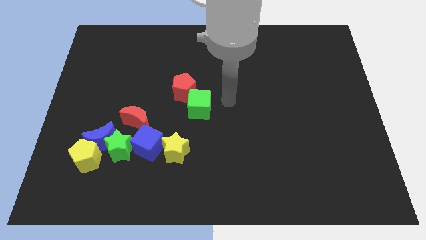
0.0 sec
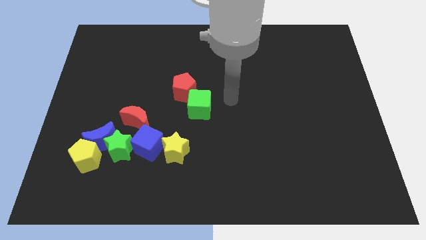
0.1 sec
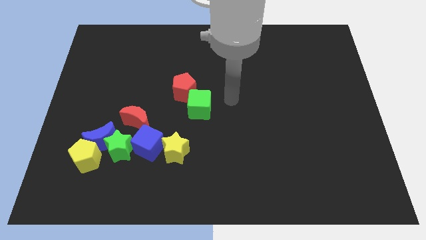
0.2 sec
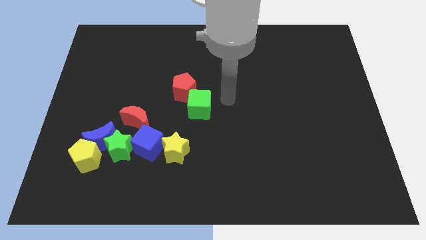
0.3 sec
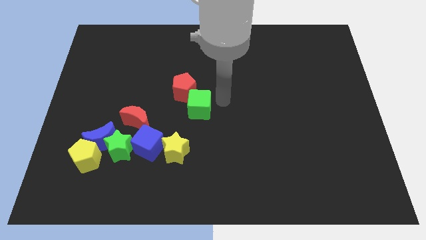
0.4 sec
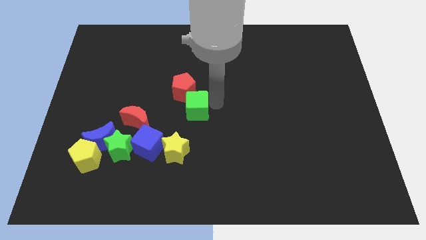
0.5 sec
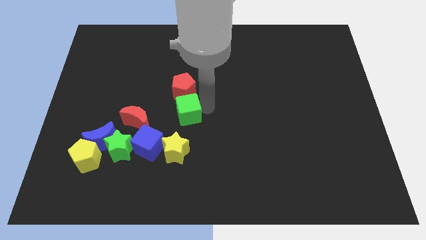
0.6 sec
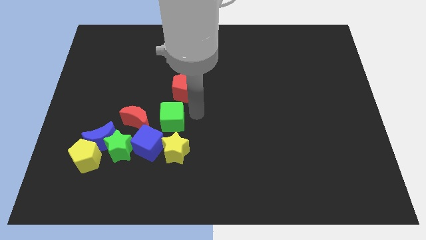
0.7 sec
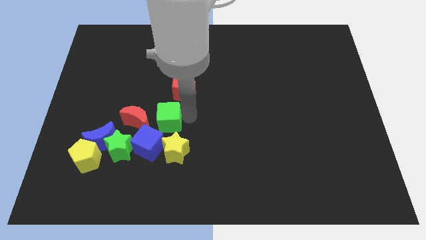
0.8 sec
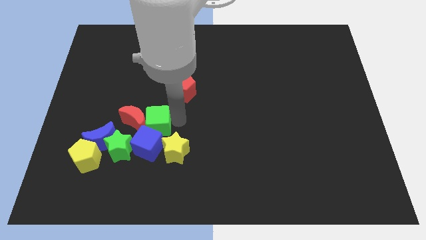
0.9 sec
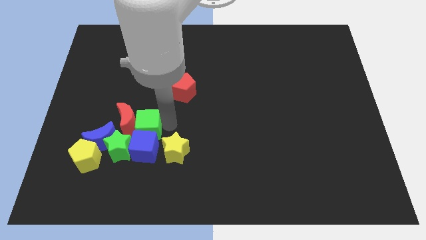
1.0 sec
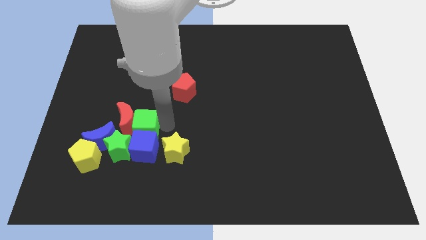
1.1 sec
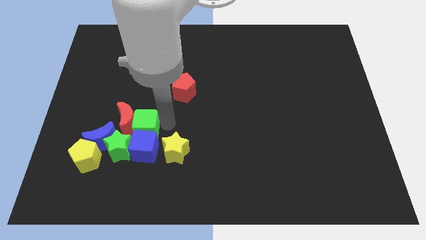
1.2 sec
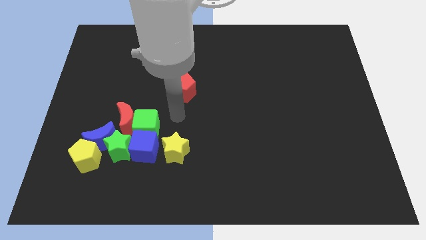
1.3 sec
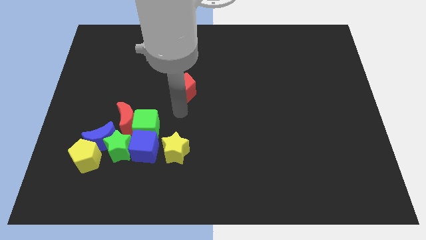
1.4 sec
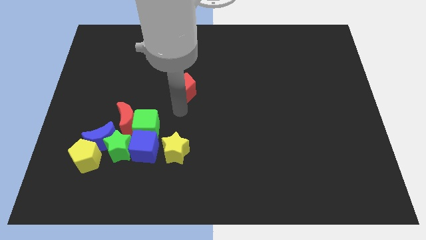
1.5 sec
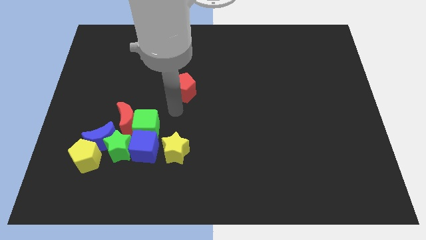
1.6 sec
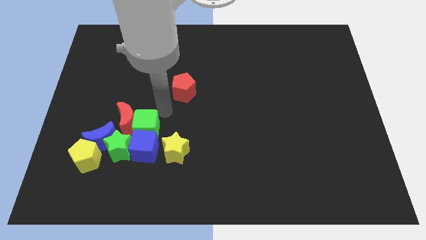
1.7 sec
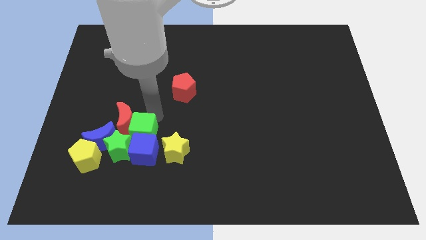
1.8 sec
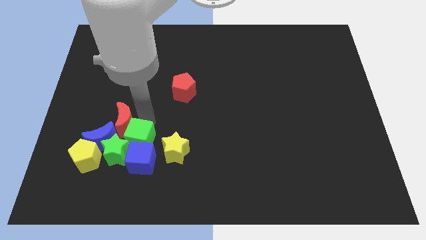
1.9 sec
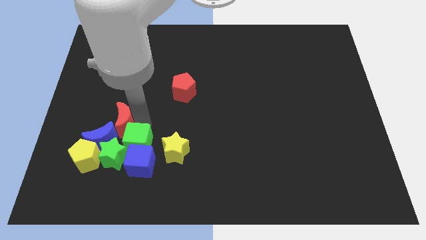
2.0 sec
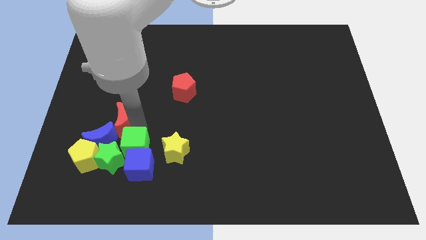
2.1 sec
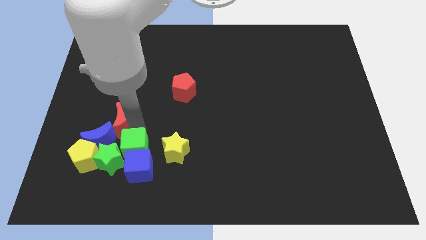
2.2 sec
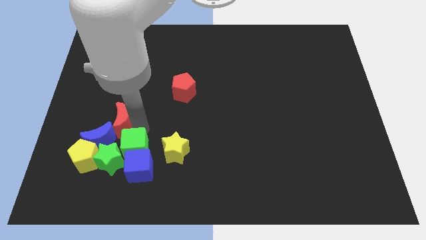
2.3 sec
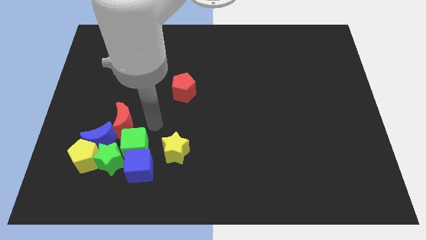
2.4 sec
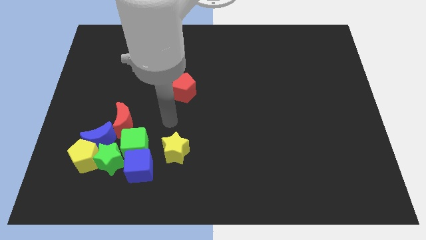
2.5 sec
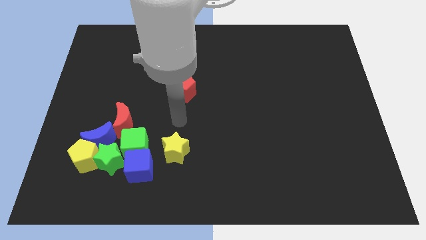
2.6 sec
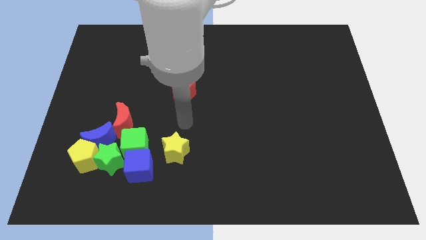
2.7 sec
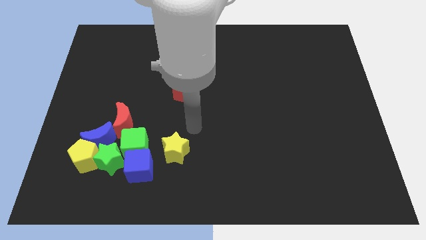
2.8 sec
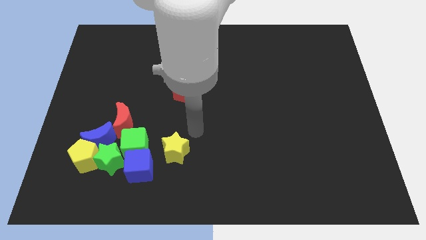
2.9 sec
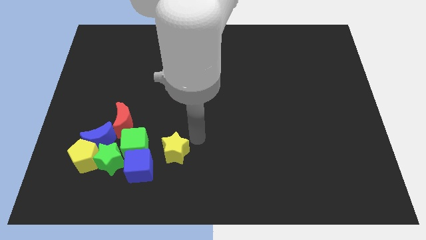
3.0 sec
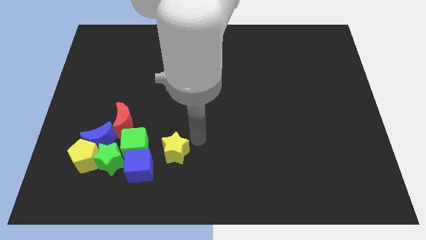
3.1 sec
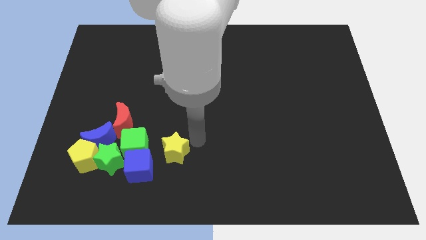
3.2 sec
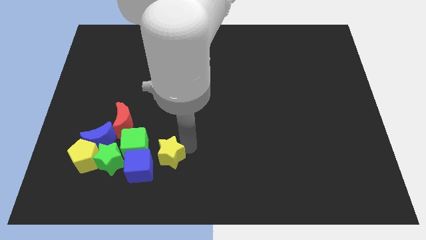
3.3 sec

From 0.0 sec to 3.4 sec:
push the green cube into the green star and blue cube

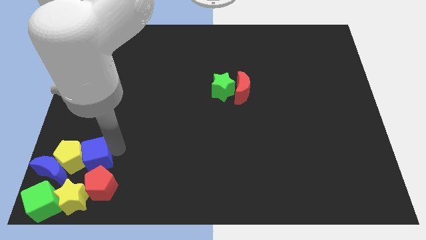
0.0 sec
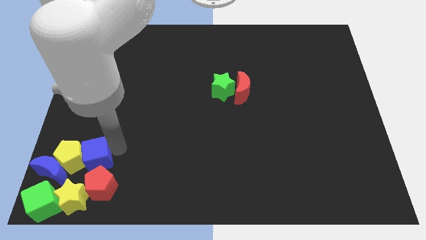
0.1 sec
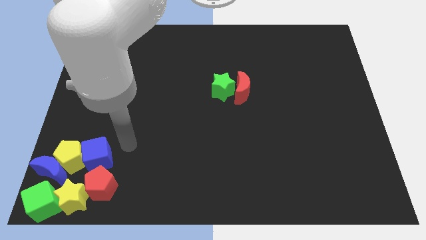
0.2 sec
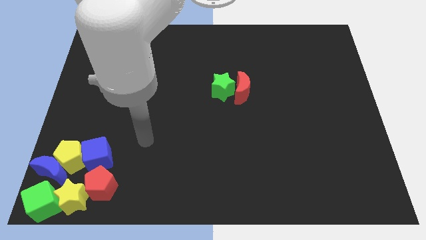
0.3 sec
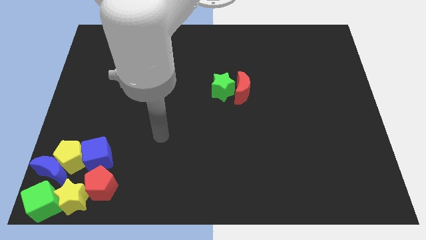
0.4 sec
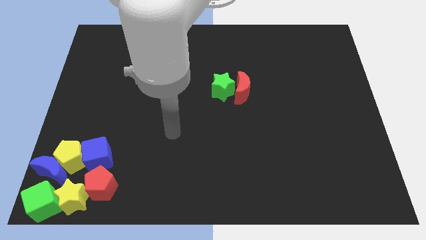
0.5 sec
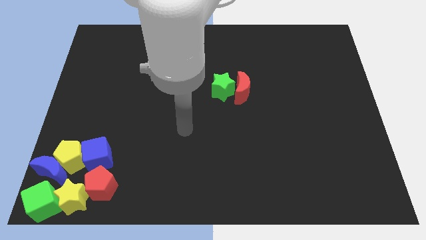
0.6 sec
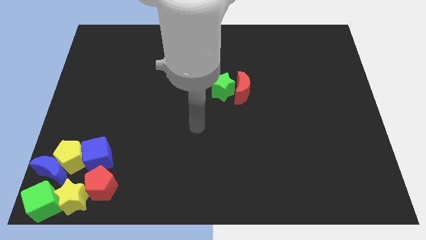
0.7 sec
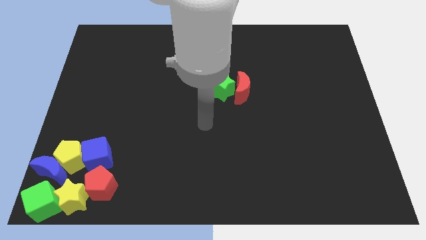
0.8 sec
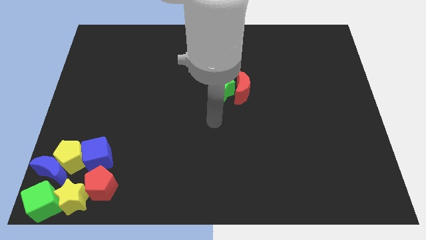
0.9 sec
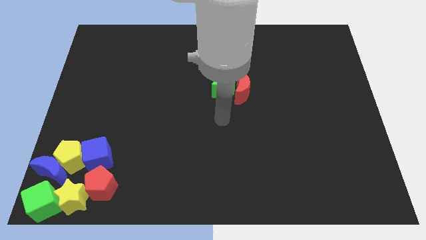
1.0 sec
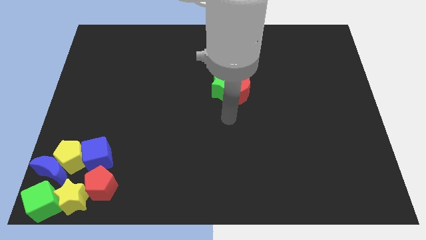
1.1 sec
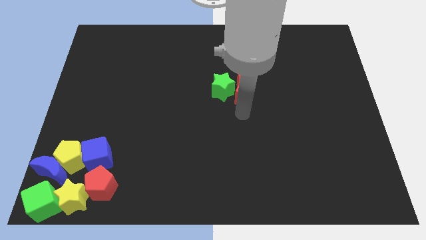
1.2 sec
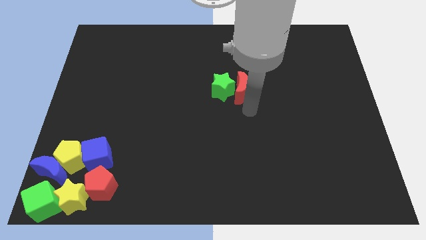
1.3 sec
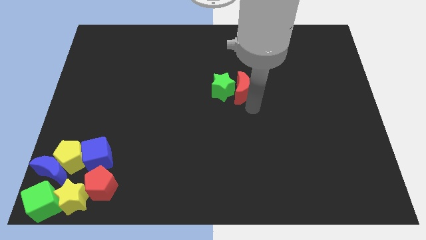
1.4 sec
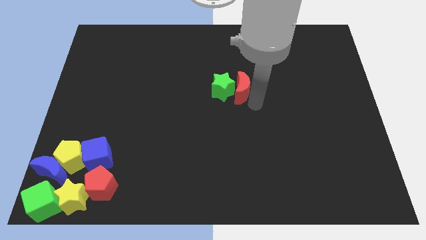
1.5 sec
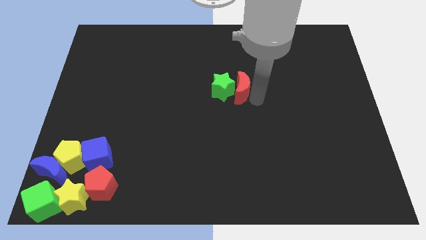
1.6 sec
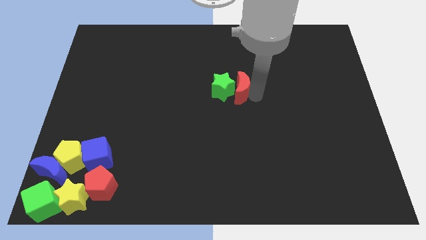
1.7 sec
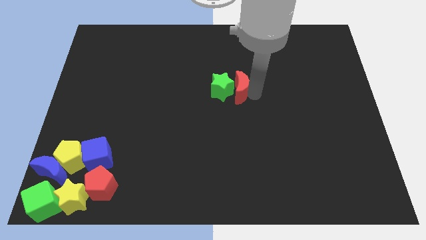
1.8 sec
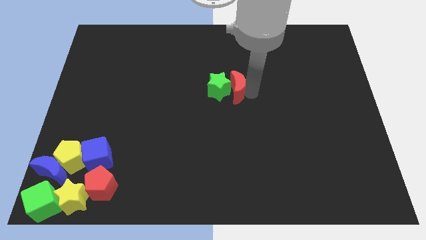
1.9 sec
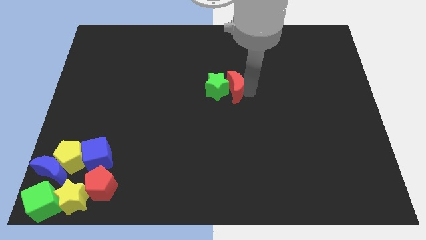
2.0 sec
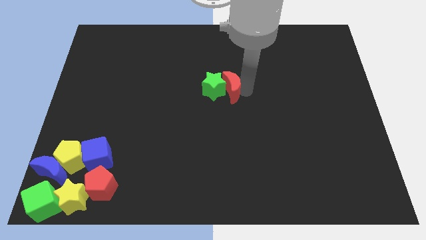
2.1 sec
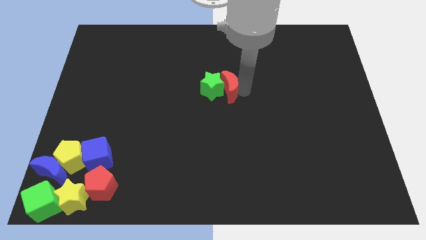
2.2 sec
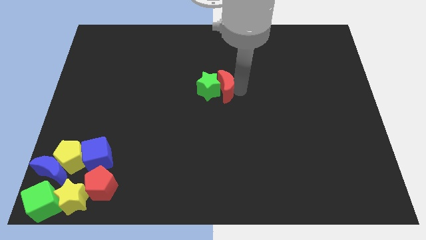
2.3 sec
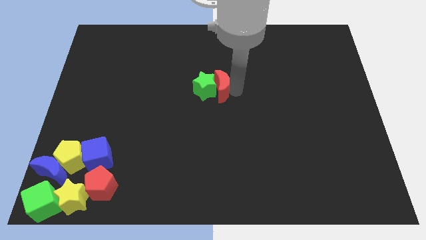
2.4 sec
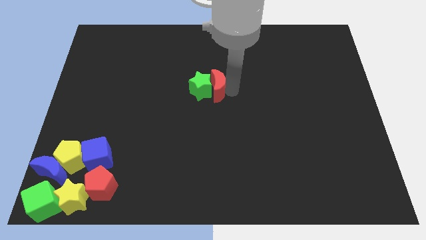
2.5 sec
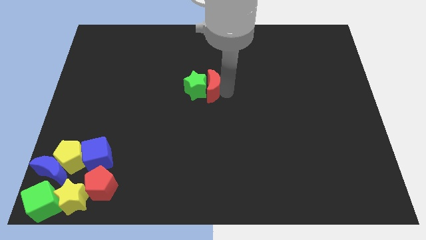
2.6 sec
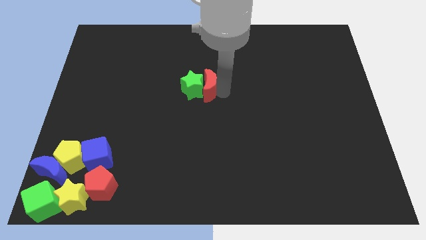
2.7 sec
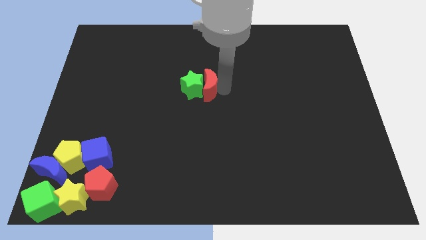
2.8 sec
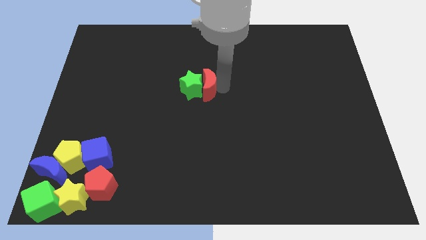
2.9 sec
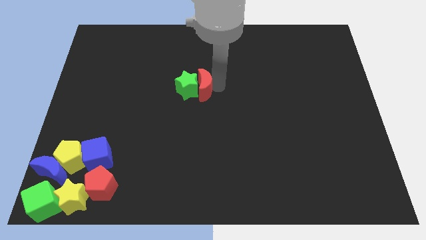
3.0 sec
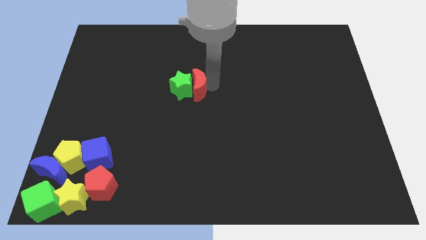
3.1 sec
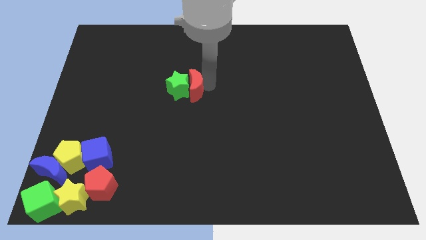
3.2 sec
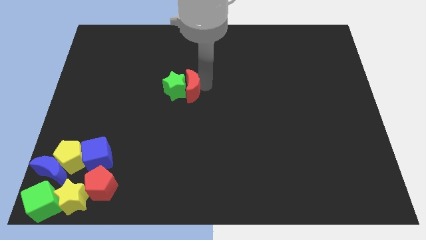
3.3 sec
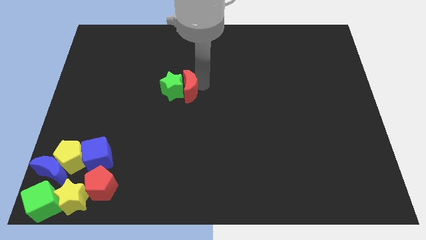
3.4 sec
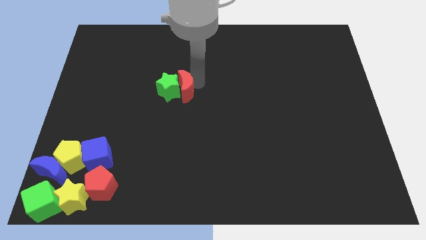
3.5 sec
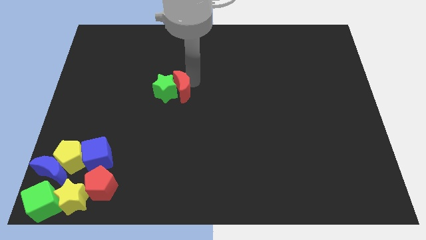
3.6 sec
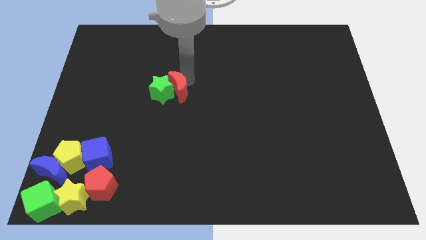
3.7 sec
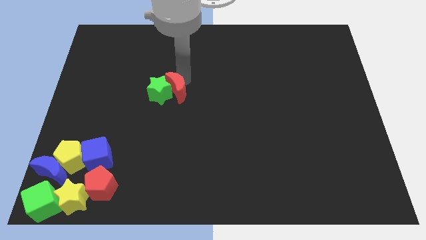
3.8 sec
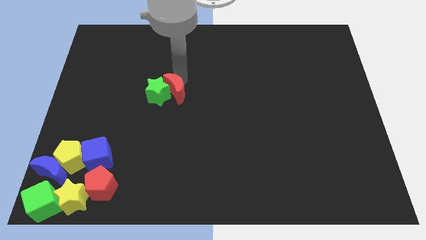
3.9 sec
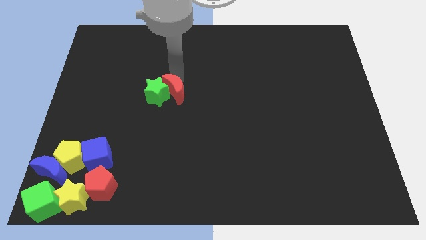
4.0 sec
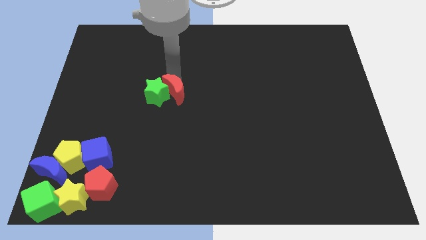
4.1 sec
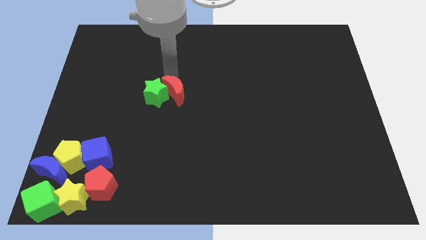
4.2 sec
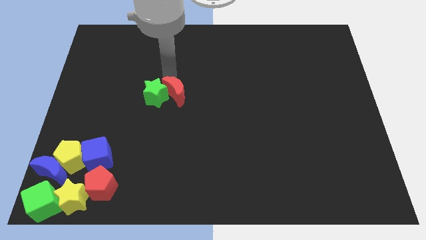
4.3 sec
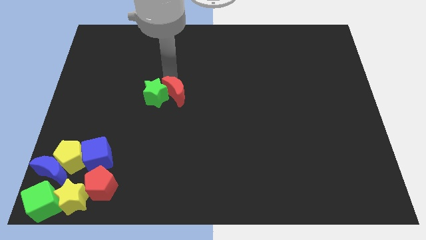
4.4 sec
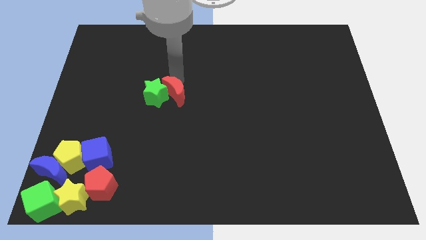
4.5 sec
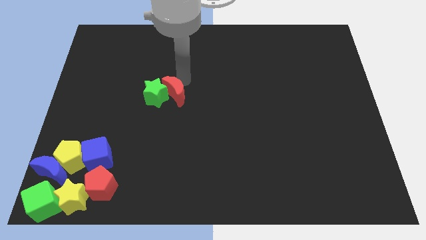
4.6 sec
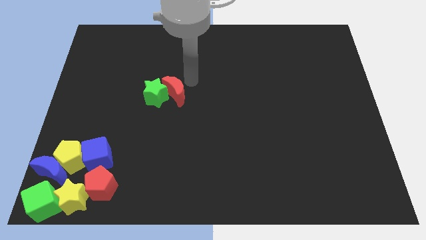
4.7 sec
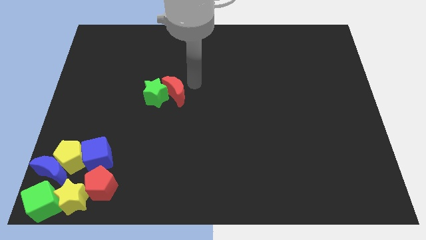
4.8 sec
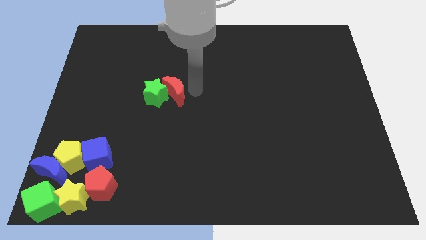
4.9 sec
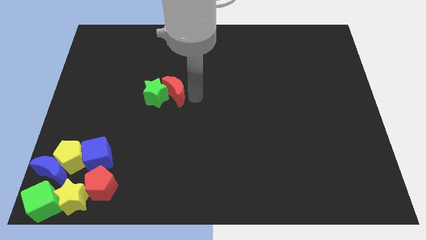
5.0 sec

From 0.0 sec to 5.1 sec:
move the green star and red moon to the left side of the board

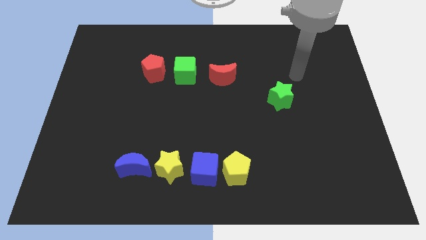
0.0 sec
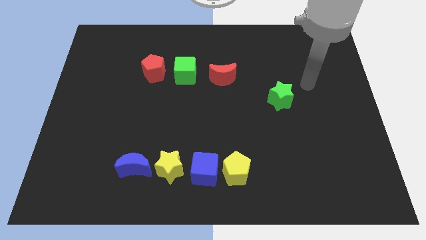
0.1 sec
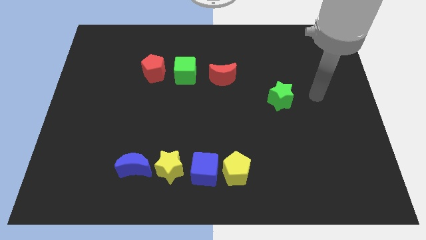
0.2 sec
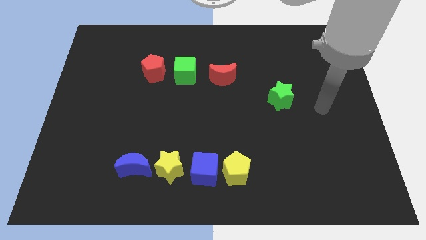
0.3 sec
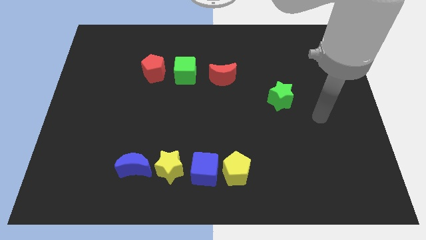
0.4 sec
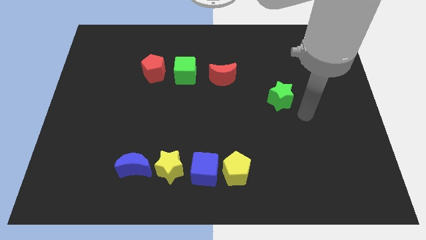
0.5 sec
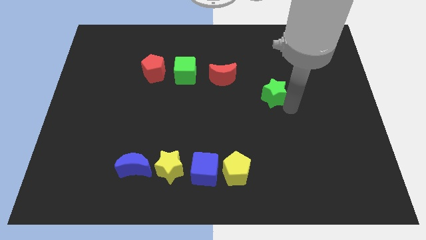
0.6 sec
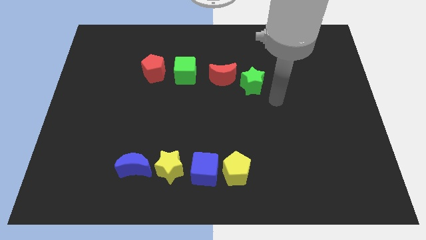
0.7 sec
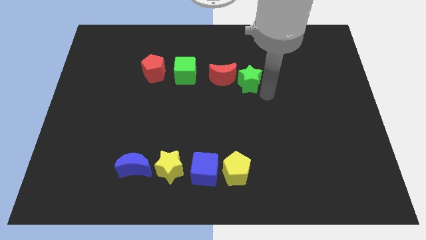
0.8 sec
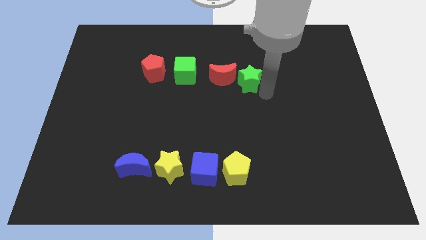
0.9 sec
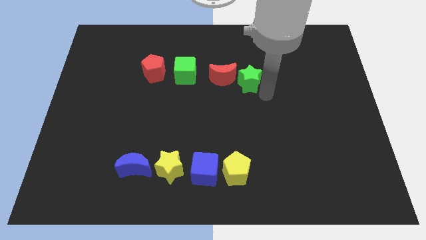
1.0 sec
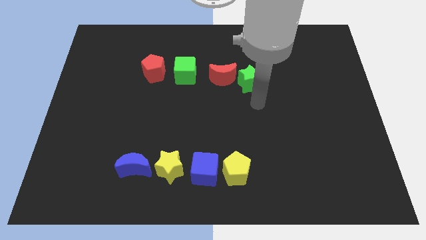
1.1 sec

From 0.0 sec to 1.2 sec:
place the green star right to the red crescent to form a horizontal line
